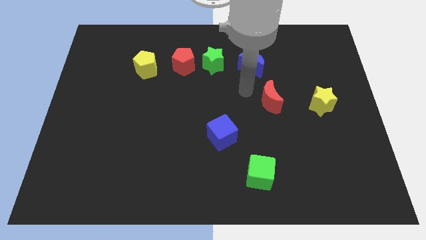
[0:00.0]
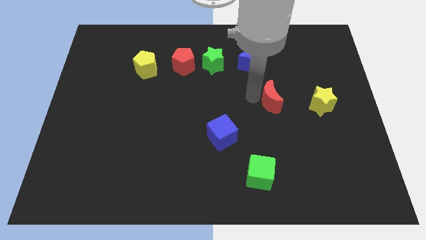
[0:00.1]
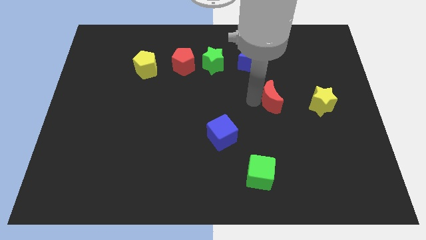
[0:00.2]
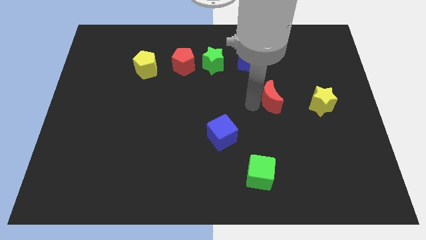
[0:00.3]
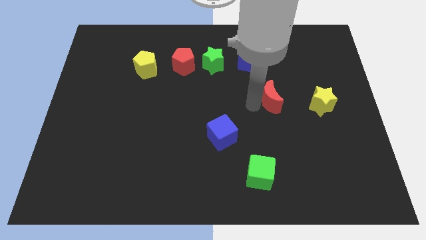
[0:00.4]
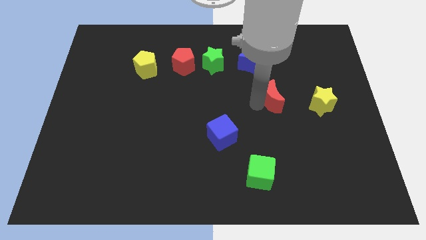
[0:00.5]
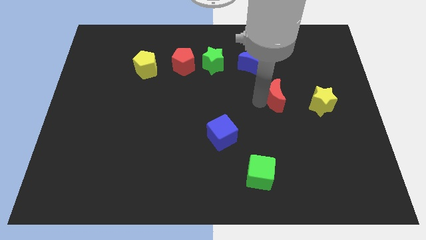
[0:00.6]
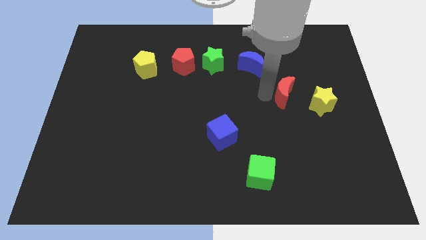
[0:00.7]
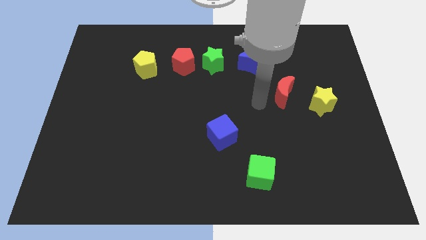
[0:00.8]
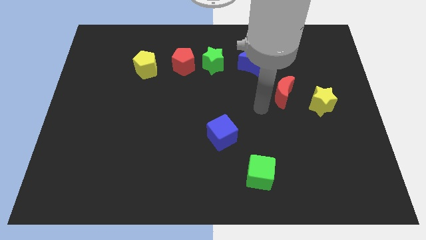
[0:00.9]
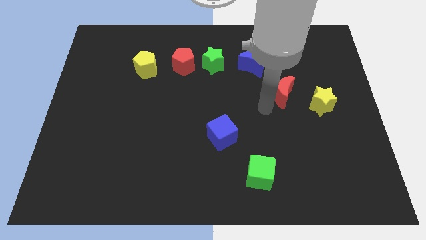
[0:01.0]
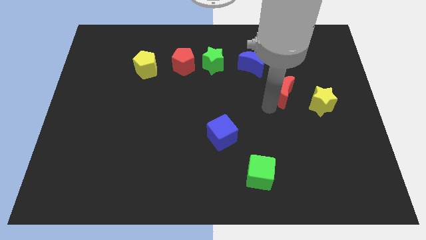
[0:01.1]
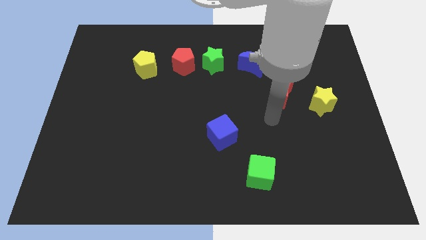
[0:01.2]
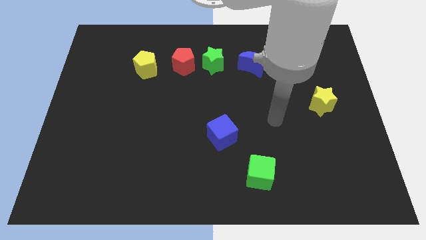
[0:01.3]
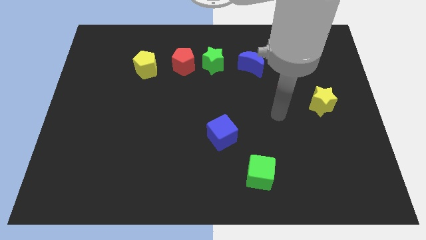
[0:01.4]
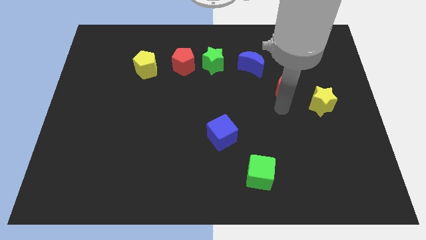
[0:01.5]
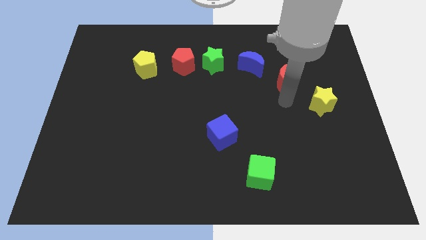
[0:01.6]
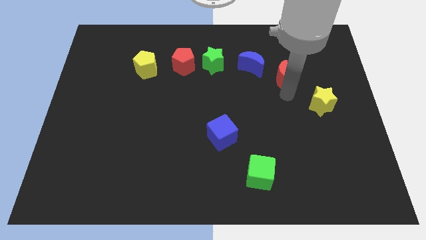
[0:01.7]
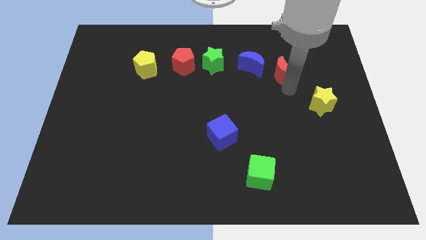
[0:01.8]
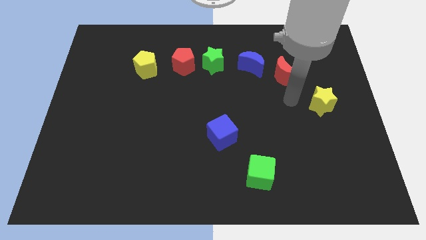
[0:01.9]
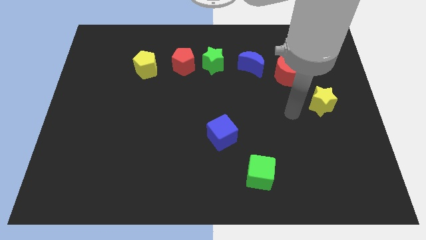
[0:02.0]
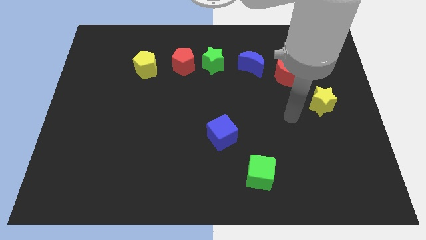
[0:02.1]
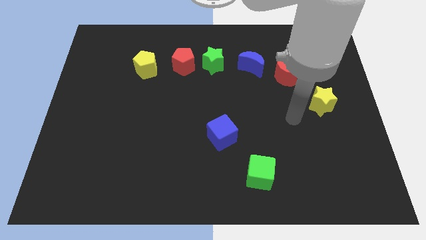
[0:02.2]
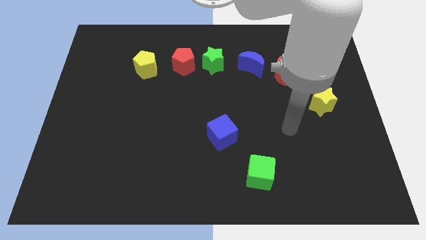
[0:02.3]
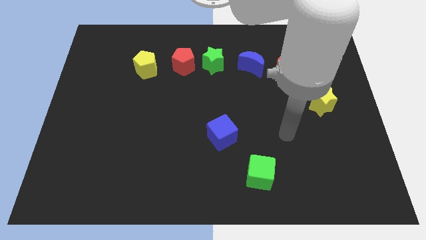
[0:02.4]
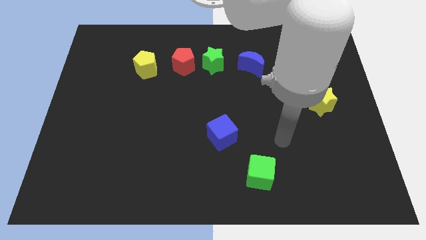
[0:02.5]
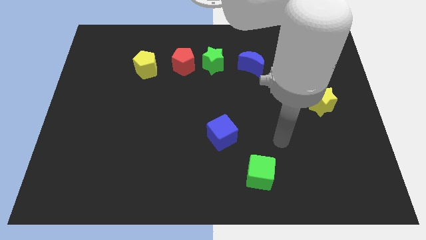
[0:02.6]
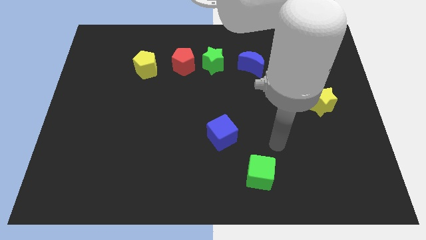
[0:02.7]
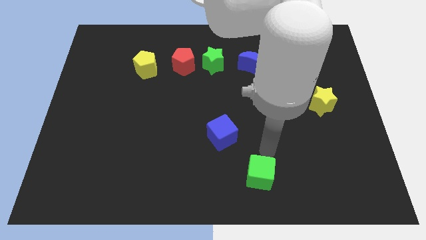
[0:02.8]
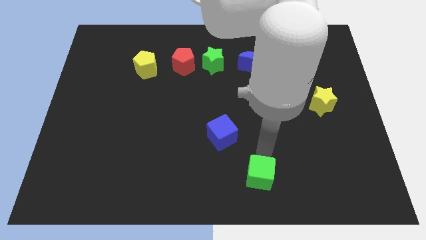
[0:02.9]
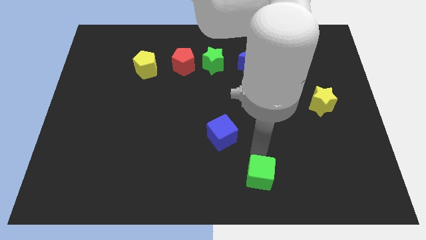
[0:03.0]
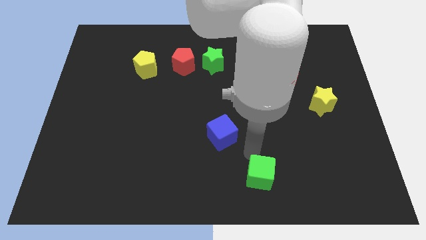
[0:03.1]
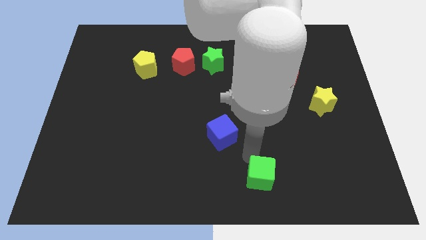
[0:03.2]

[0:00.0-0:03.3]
slide the red crescent to the right side of the blue crescent

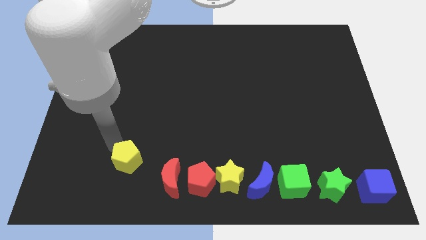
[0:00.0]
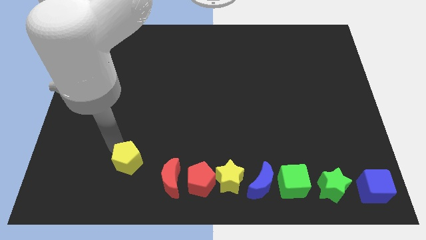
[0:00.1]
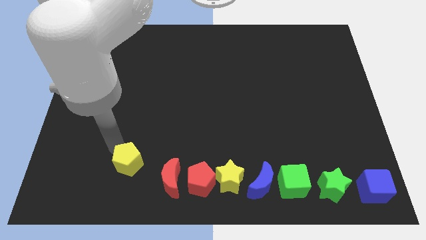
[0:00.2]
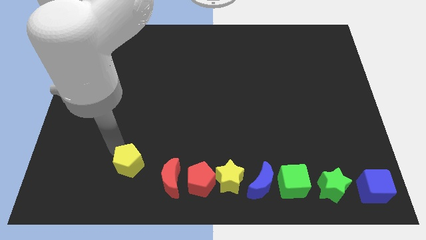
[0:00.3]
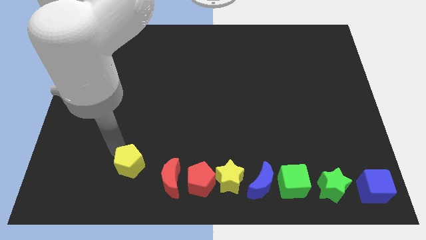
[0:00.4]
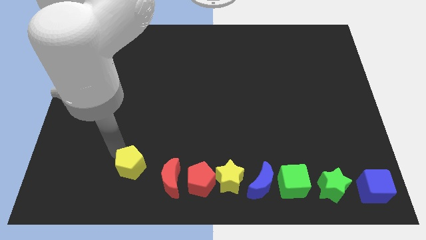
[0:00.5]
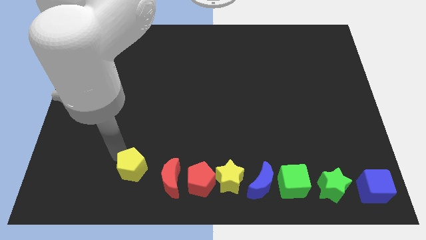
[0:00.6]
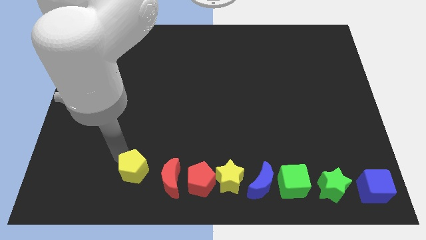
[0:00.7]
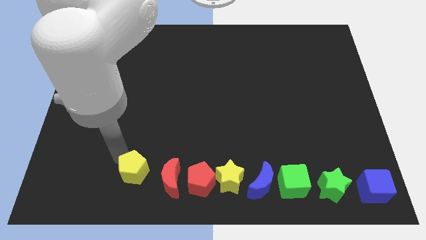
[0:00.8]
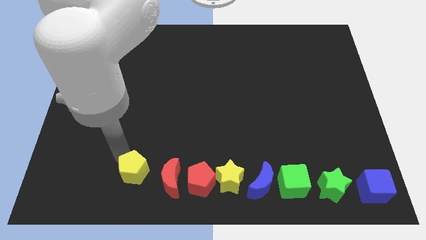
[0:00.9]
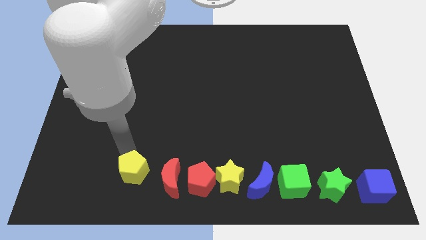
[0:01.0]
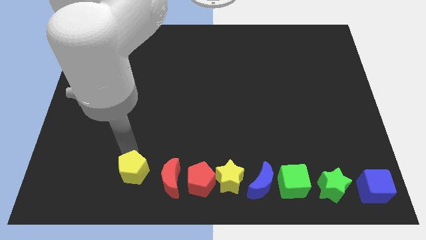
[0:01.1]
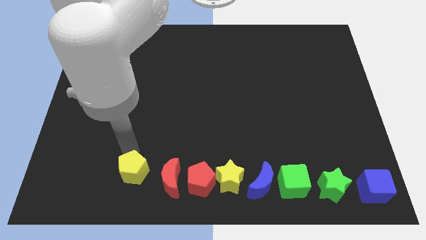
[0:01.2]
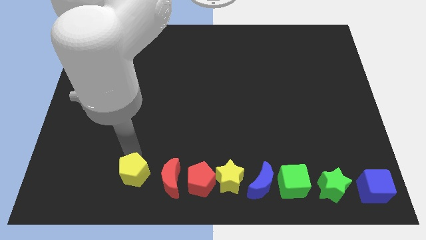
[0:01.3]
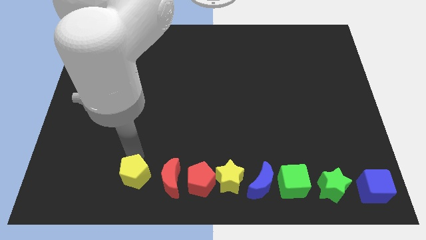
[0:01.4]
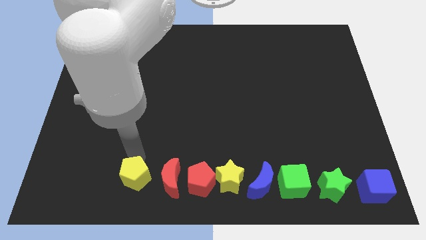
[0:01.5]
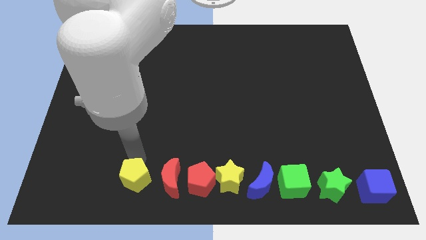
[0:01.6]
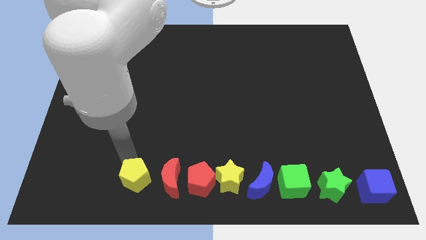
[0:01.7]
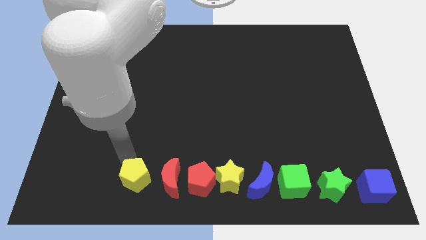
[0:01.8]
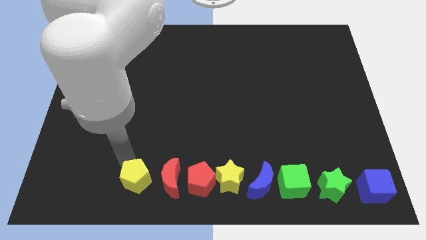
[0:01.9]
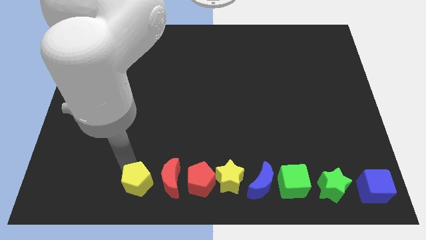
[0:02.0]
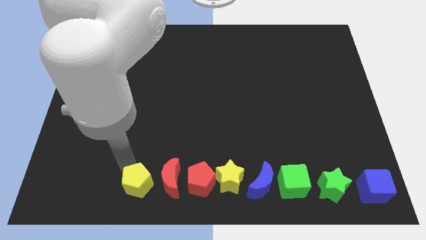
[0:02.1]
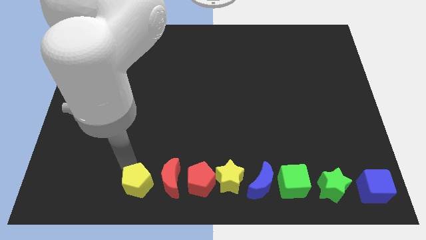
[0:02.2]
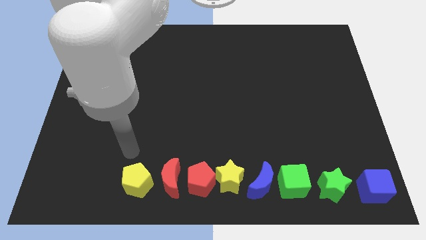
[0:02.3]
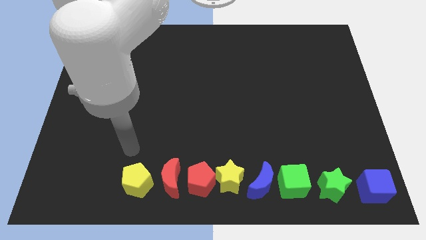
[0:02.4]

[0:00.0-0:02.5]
place the yellow pentagon close to the red moon

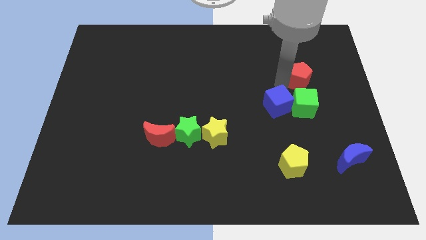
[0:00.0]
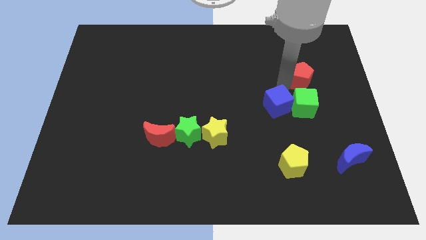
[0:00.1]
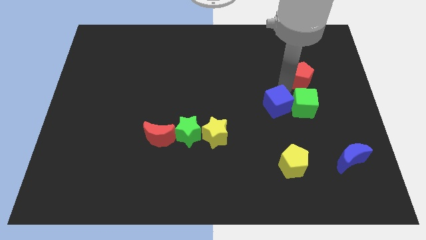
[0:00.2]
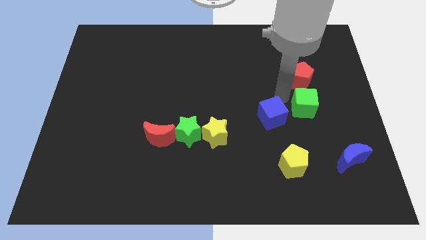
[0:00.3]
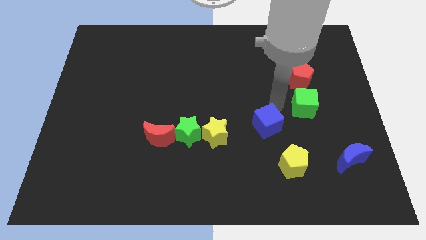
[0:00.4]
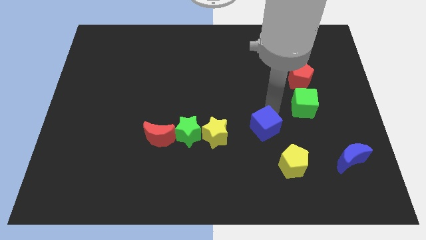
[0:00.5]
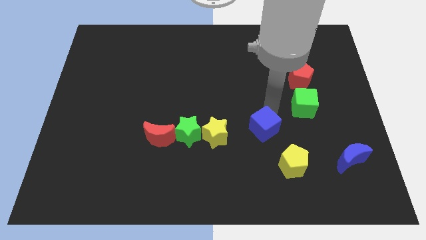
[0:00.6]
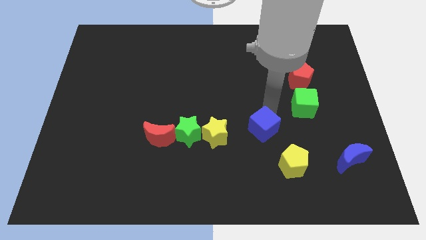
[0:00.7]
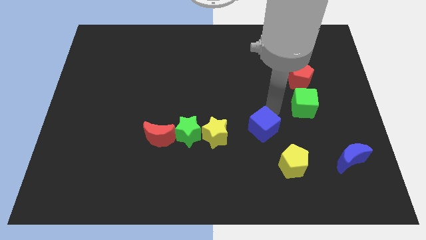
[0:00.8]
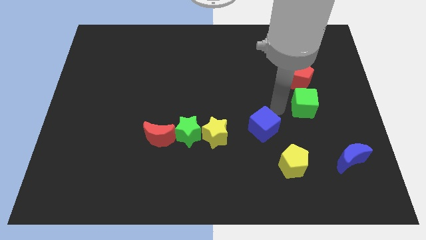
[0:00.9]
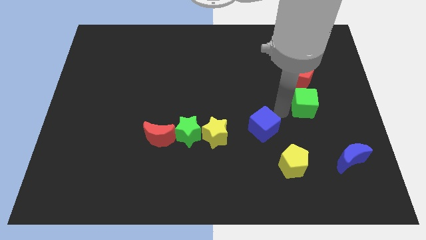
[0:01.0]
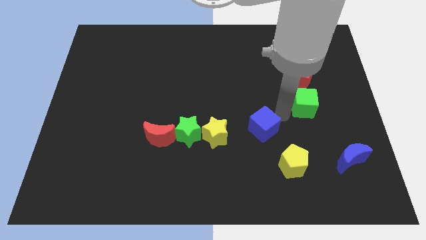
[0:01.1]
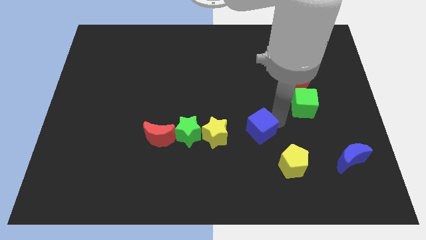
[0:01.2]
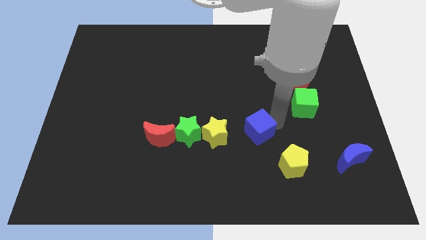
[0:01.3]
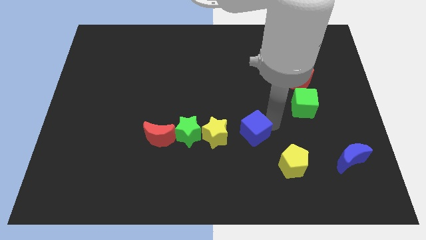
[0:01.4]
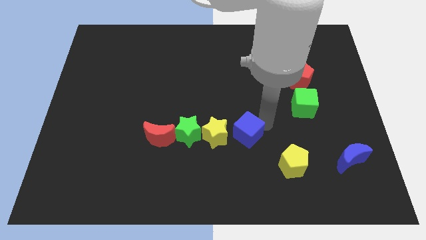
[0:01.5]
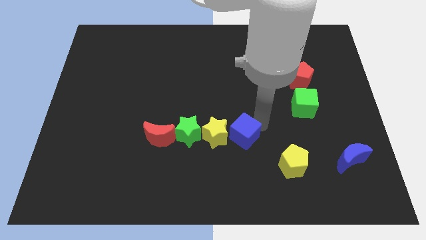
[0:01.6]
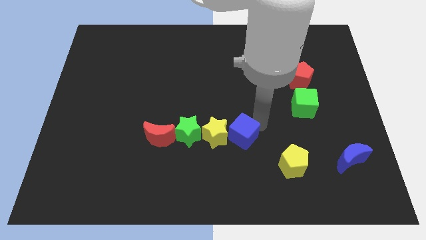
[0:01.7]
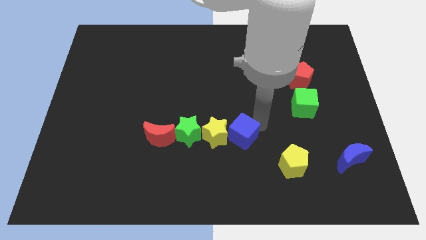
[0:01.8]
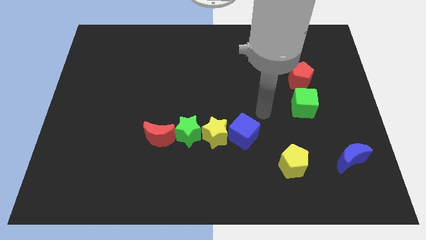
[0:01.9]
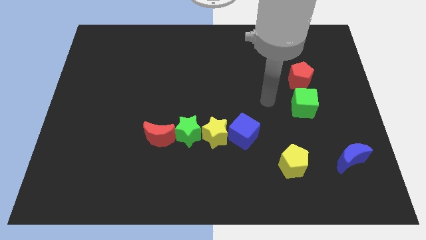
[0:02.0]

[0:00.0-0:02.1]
move the blue cube right side of the yellow star

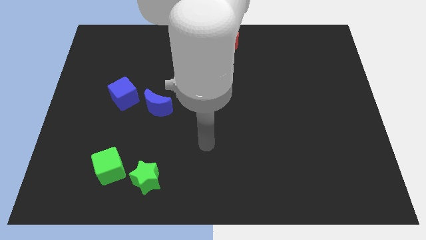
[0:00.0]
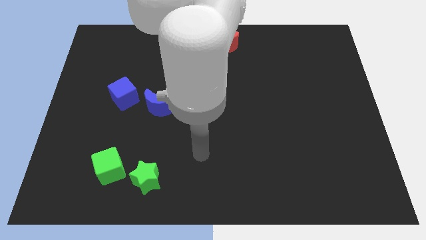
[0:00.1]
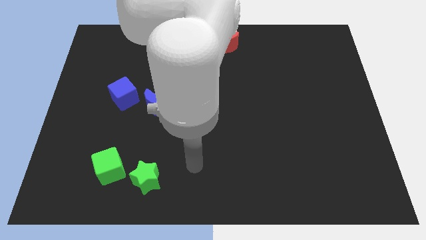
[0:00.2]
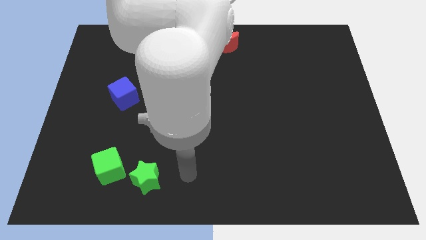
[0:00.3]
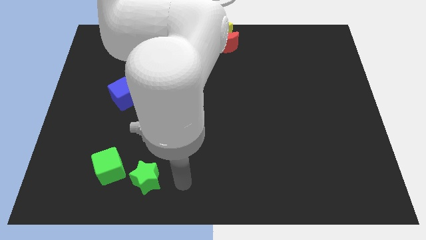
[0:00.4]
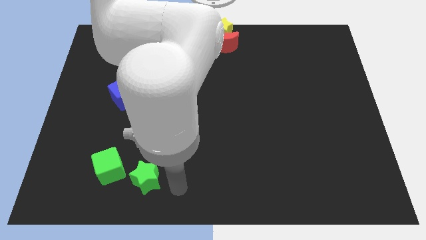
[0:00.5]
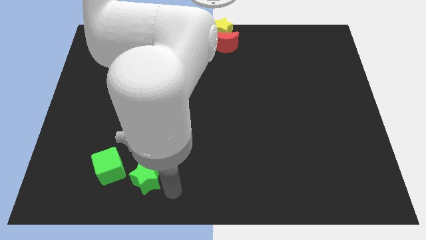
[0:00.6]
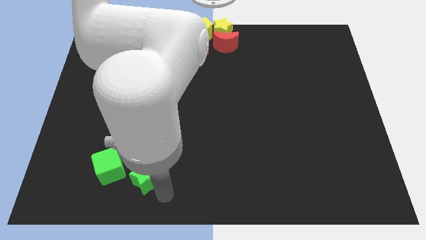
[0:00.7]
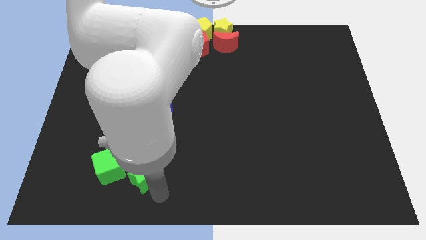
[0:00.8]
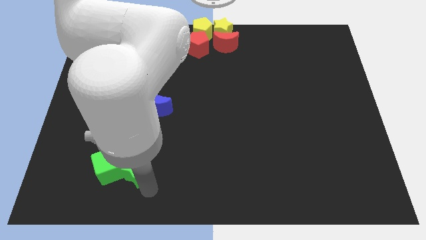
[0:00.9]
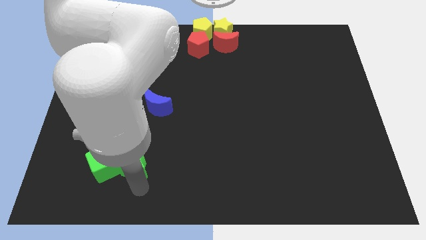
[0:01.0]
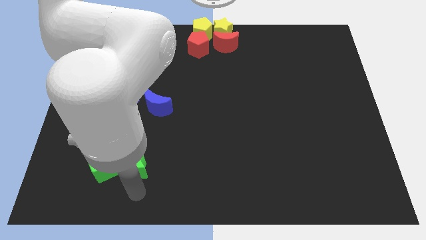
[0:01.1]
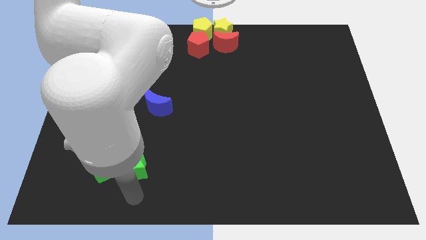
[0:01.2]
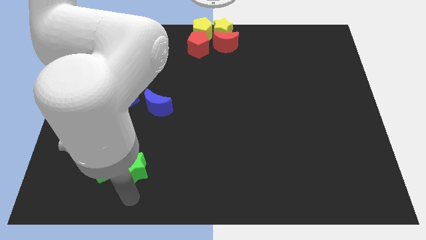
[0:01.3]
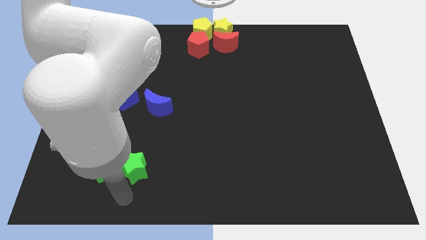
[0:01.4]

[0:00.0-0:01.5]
make the green star to touch the right side of the green cube
